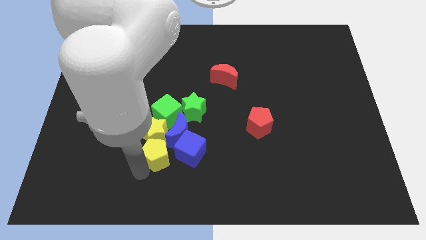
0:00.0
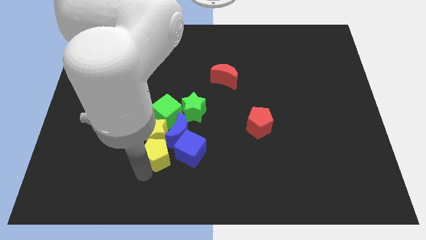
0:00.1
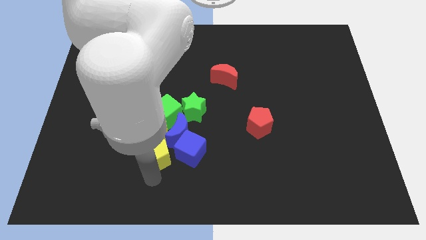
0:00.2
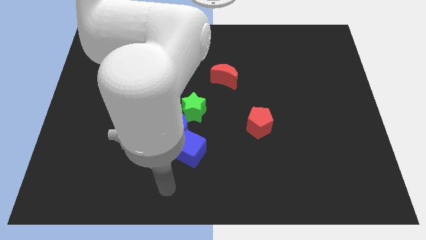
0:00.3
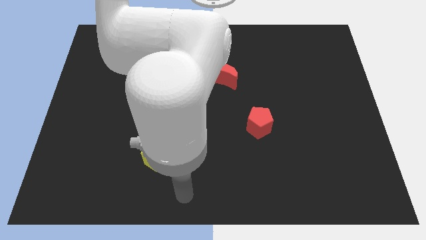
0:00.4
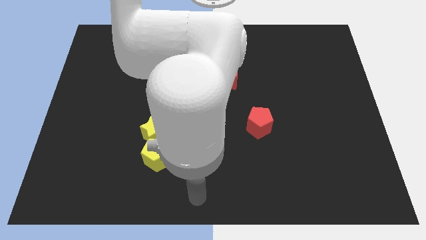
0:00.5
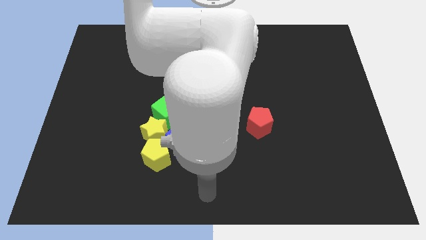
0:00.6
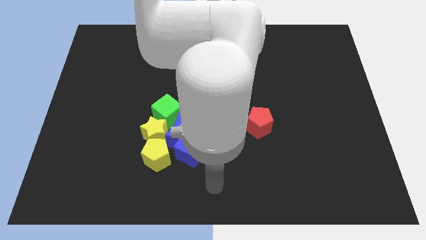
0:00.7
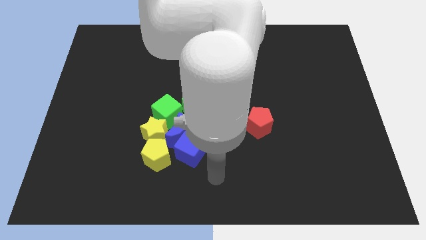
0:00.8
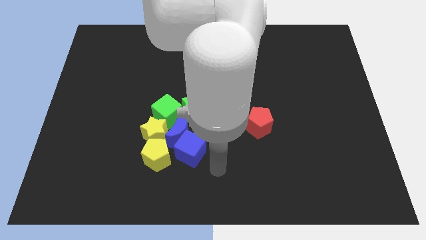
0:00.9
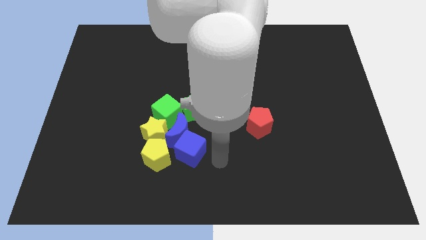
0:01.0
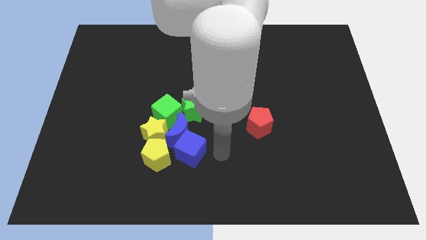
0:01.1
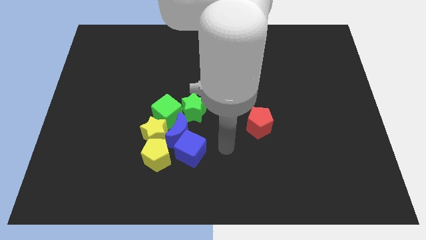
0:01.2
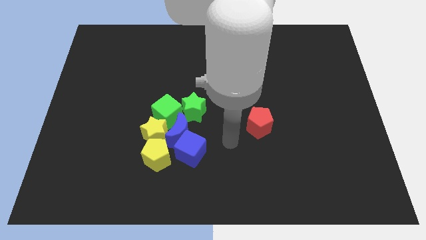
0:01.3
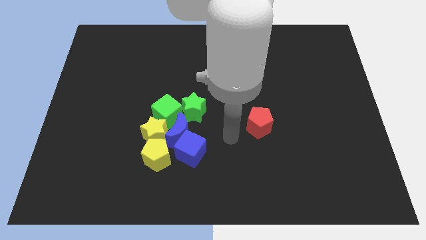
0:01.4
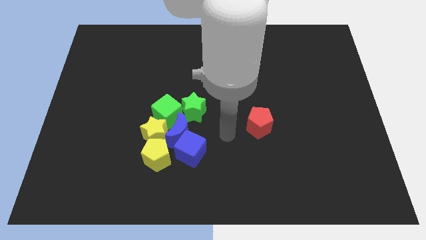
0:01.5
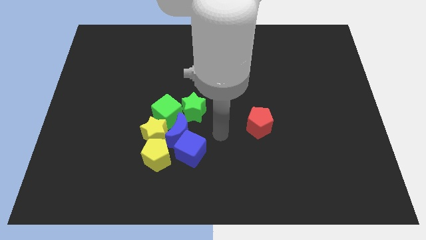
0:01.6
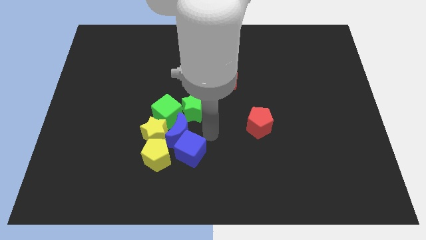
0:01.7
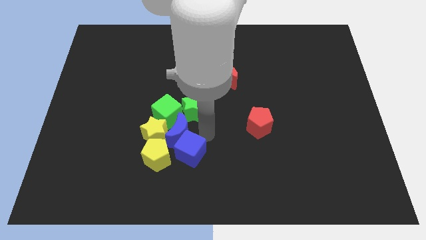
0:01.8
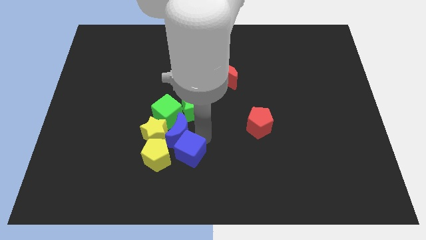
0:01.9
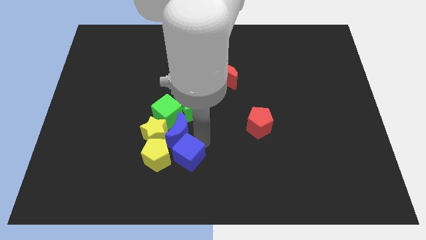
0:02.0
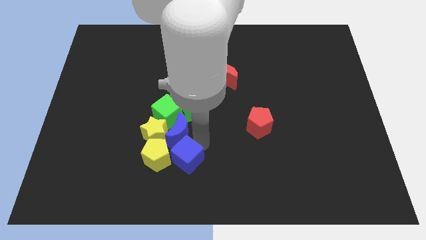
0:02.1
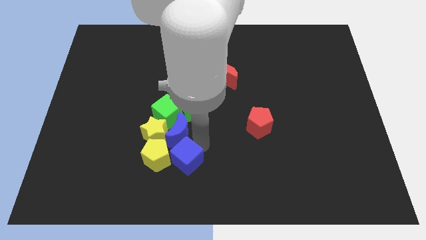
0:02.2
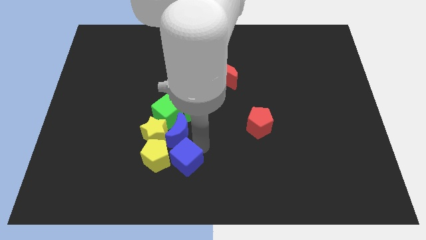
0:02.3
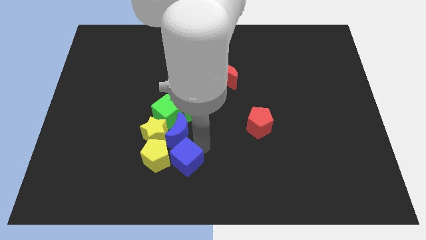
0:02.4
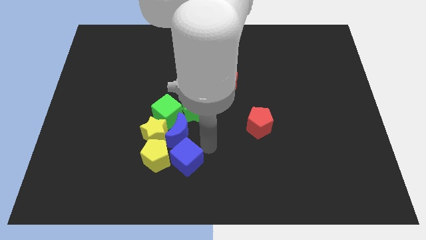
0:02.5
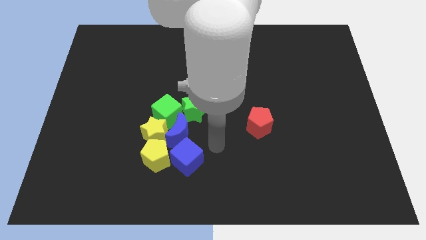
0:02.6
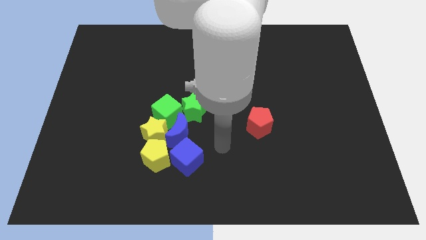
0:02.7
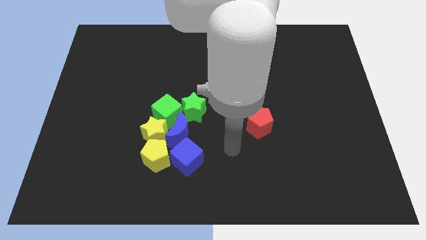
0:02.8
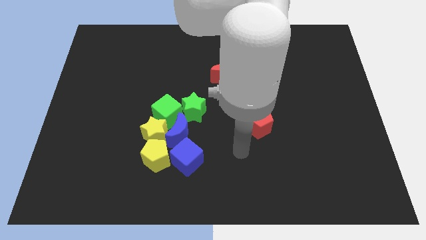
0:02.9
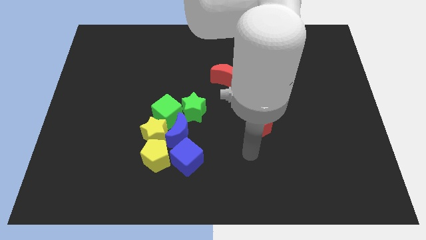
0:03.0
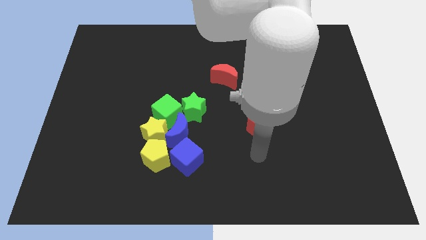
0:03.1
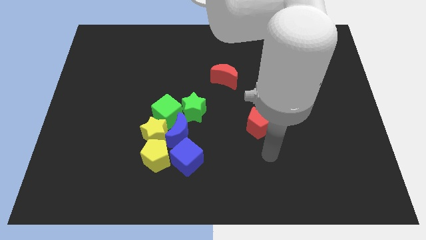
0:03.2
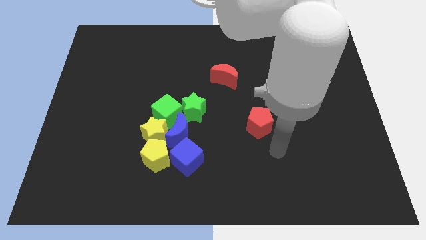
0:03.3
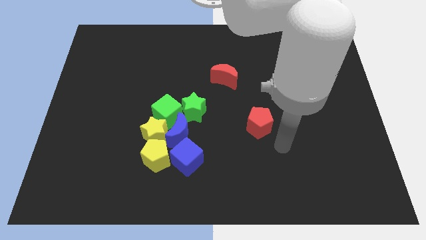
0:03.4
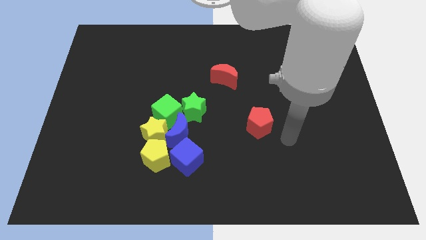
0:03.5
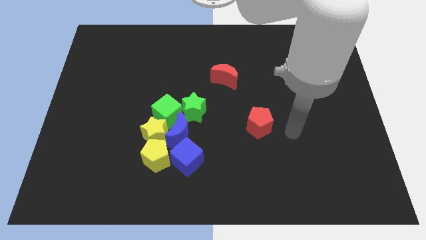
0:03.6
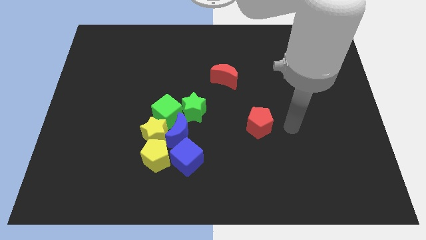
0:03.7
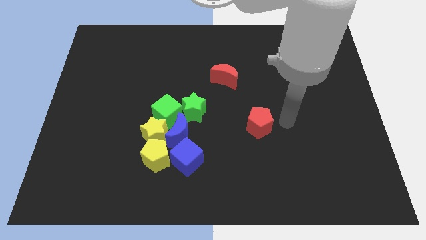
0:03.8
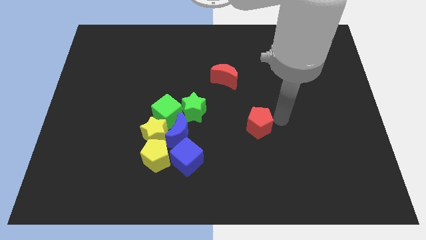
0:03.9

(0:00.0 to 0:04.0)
push the blue cube to the left side of the board

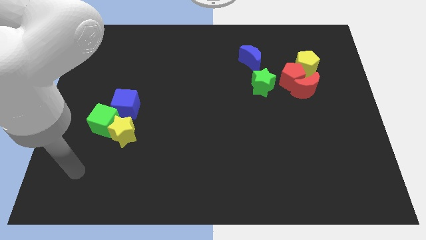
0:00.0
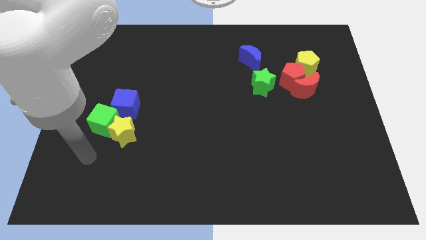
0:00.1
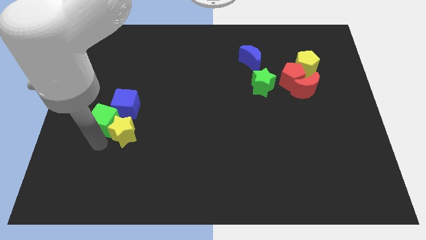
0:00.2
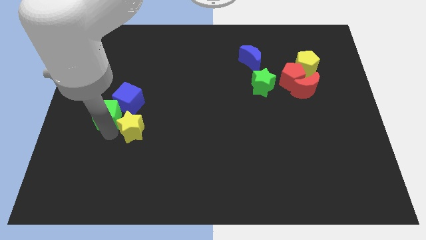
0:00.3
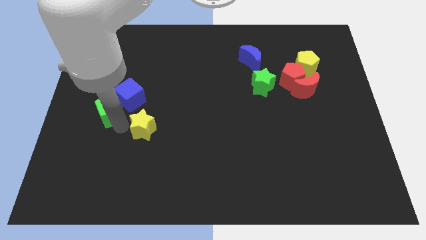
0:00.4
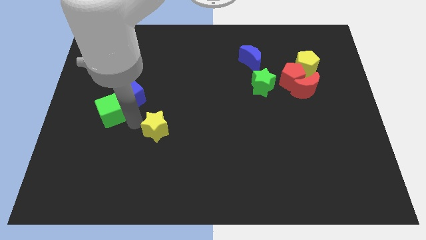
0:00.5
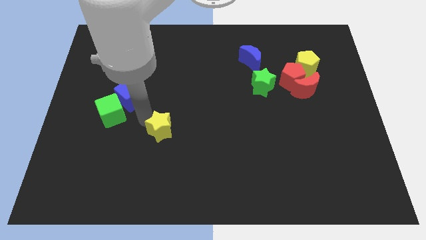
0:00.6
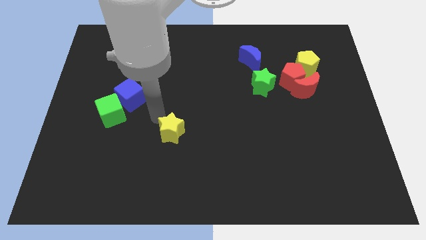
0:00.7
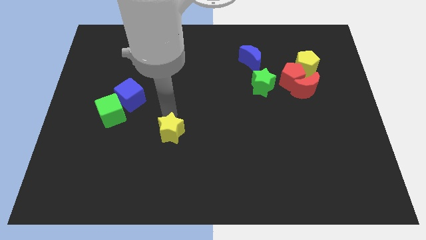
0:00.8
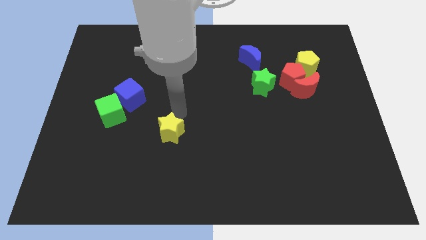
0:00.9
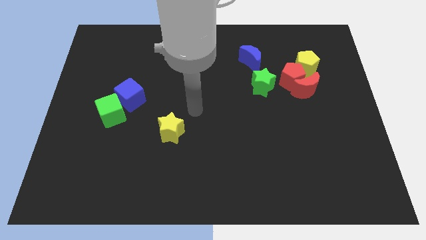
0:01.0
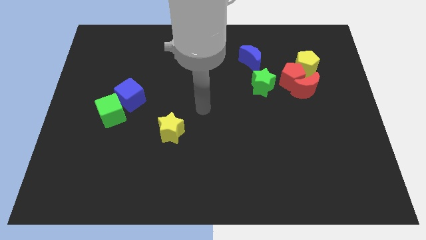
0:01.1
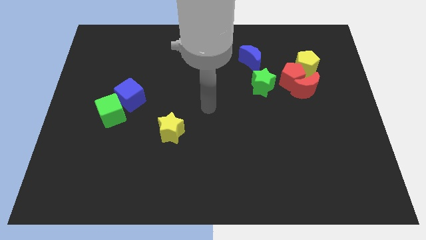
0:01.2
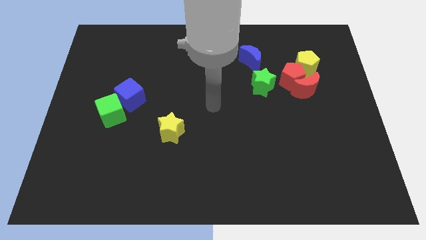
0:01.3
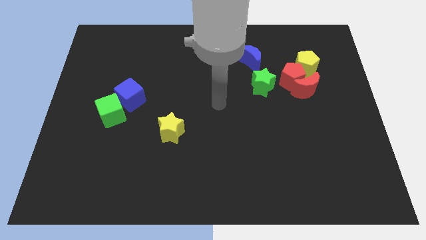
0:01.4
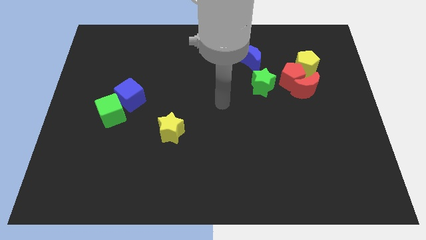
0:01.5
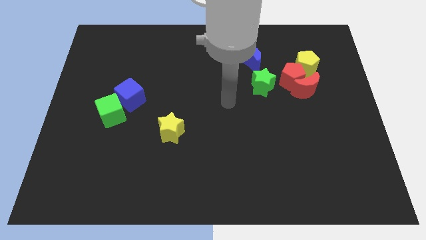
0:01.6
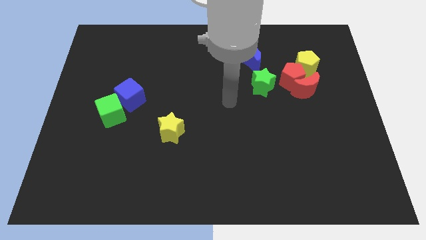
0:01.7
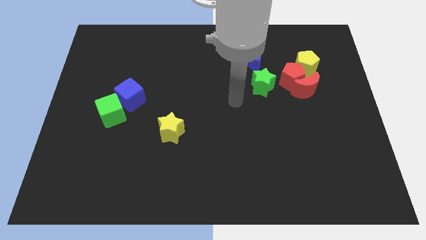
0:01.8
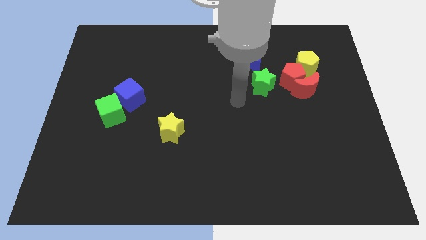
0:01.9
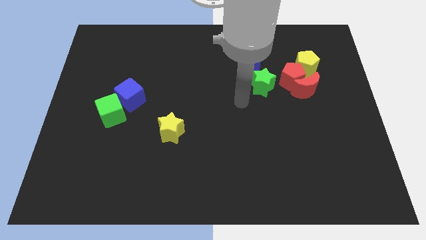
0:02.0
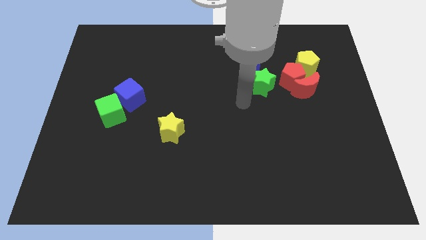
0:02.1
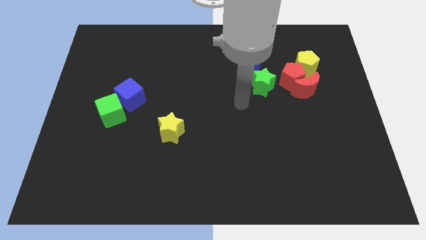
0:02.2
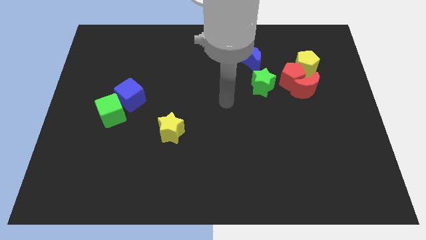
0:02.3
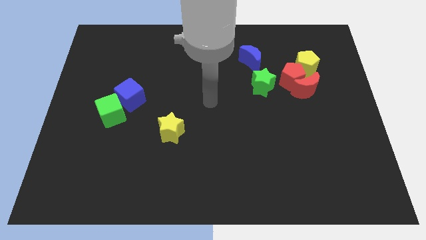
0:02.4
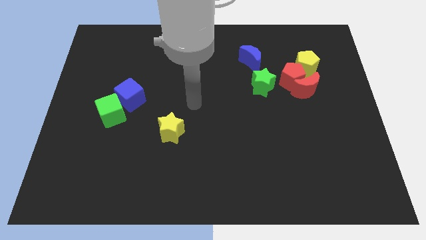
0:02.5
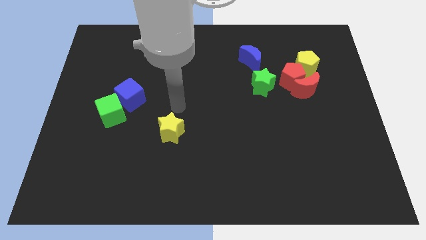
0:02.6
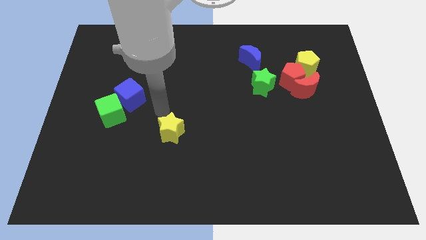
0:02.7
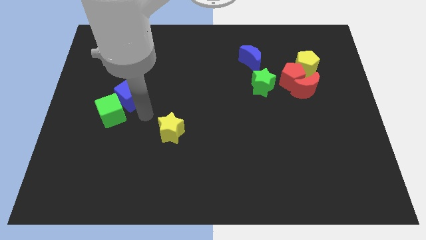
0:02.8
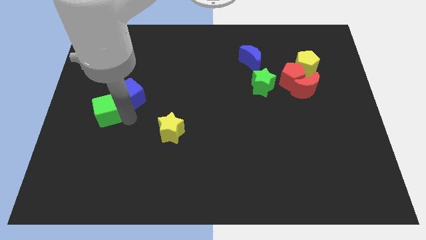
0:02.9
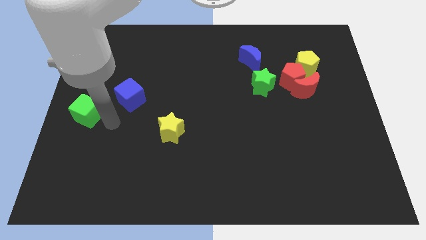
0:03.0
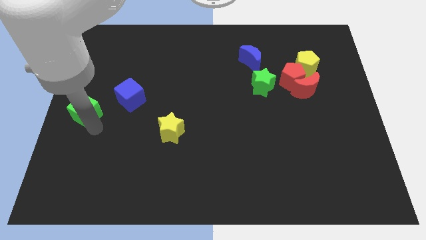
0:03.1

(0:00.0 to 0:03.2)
place the yellow star diagonally to the blue cube

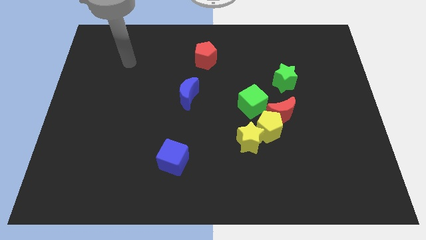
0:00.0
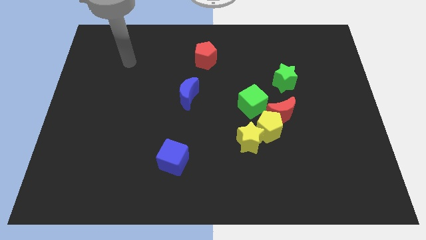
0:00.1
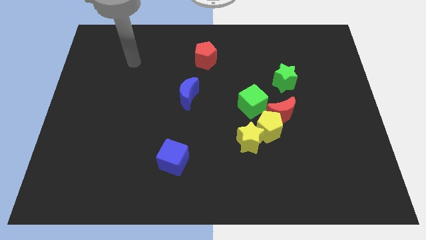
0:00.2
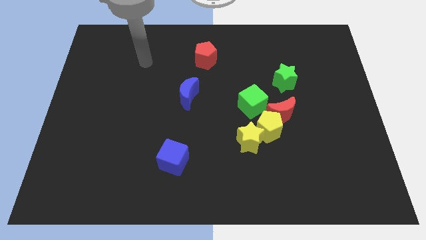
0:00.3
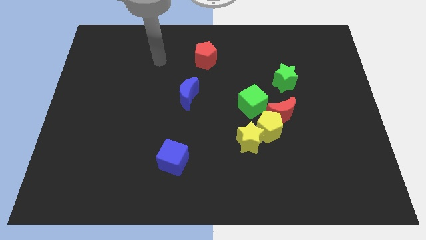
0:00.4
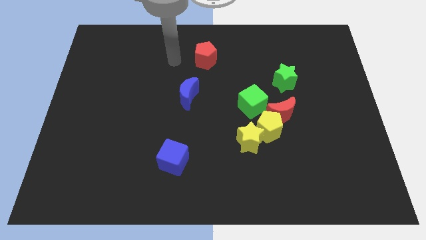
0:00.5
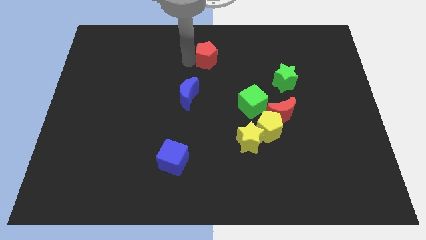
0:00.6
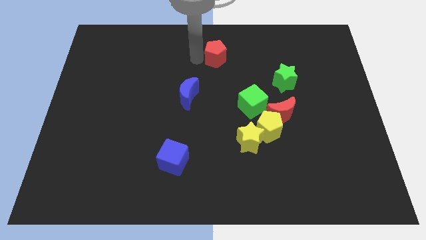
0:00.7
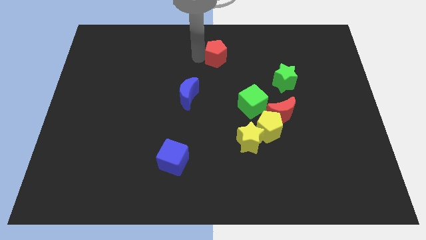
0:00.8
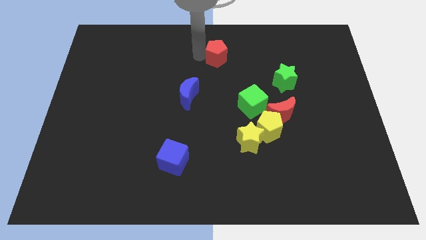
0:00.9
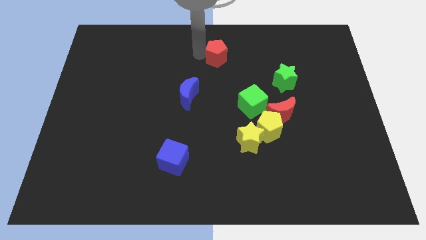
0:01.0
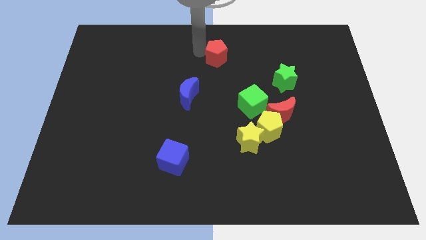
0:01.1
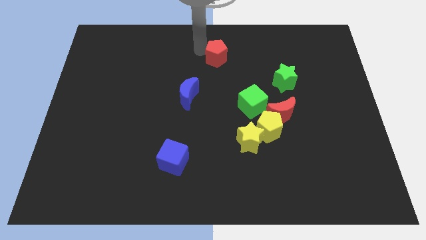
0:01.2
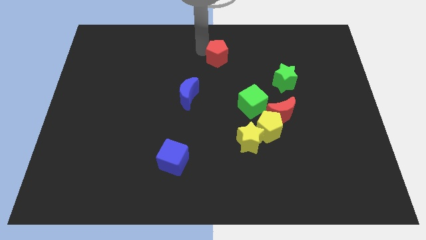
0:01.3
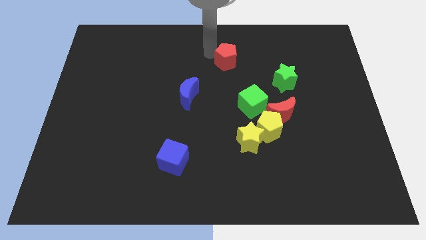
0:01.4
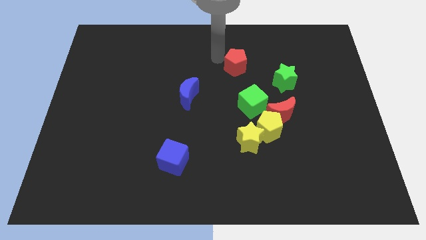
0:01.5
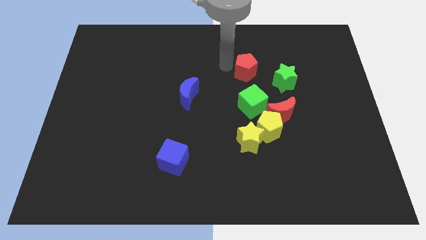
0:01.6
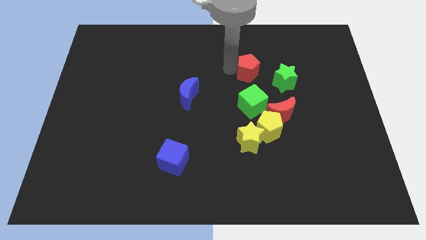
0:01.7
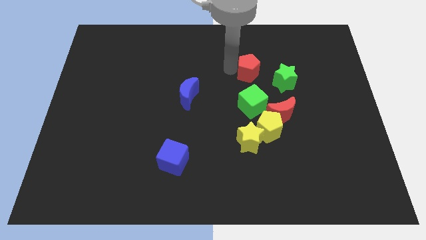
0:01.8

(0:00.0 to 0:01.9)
push the red pentagon vertically above to the green cube
